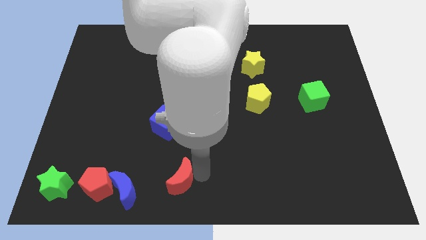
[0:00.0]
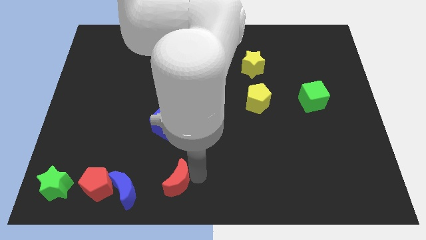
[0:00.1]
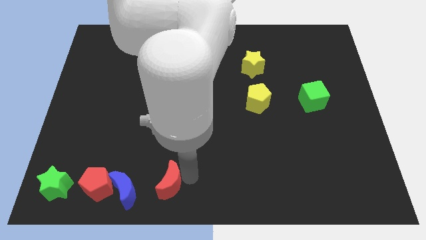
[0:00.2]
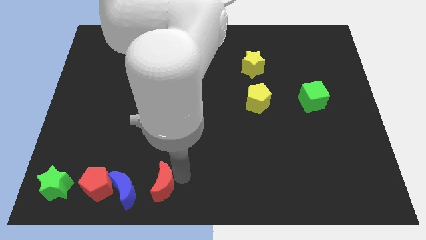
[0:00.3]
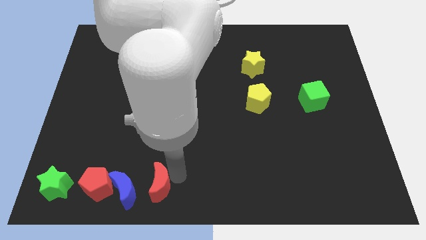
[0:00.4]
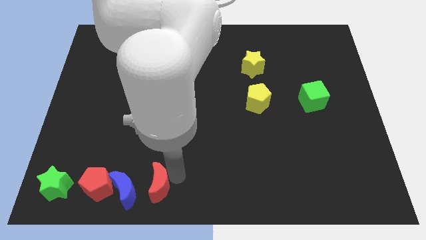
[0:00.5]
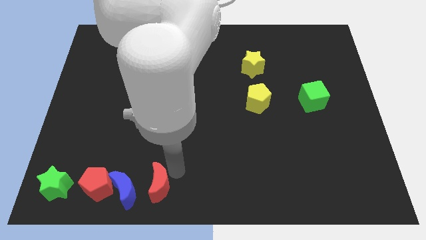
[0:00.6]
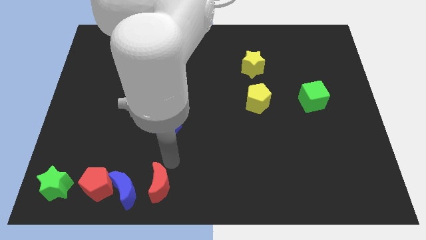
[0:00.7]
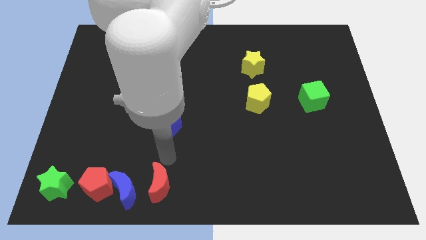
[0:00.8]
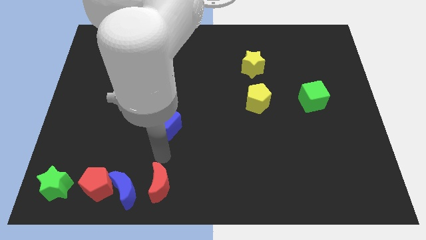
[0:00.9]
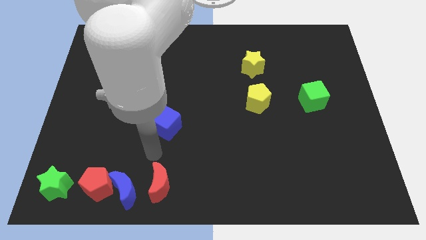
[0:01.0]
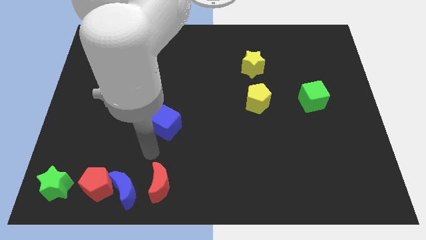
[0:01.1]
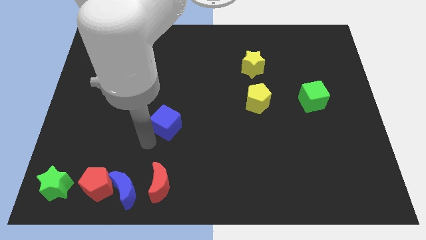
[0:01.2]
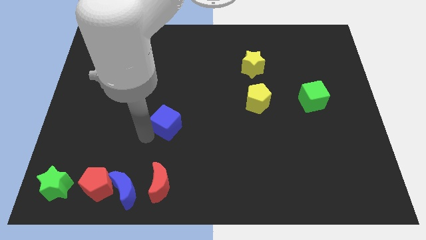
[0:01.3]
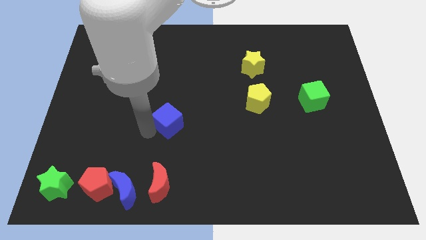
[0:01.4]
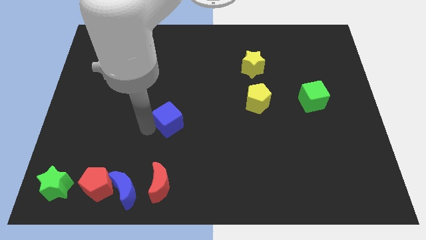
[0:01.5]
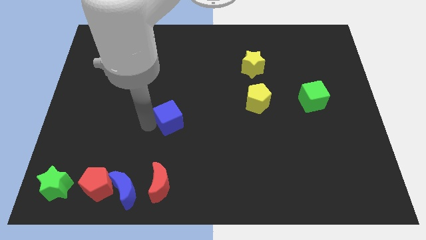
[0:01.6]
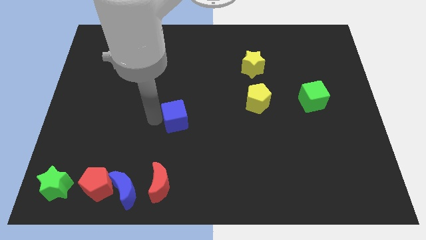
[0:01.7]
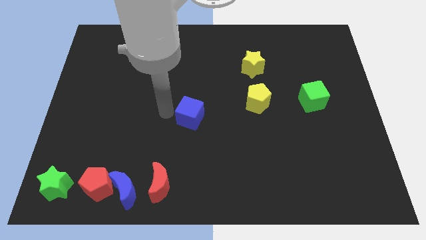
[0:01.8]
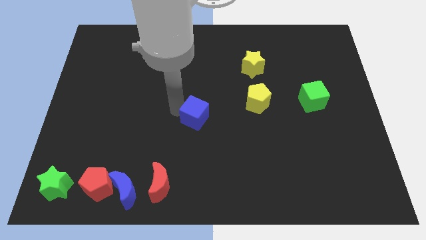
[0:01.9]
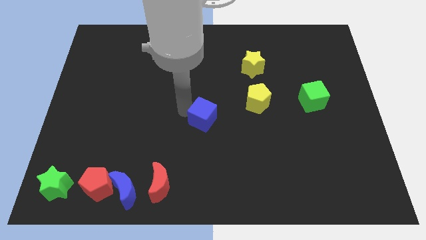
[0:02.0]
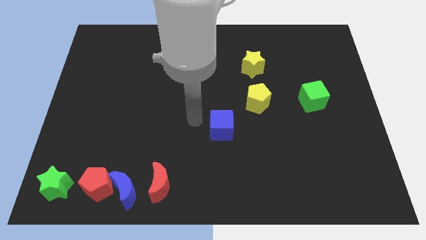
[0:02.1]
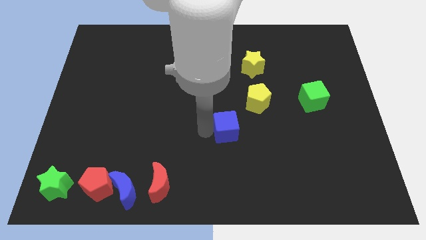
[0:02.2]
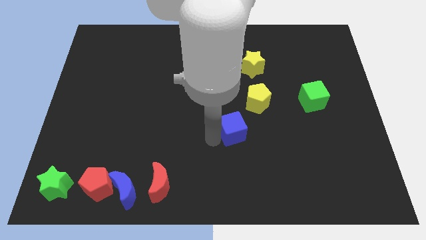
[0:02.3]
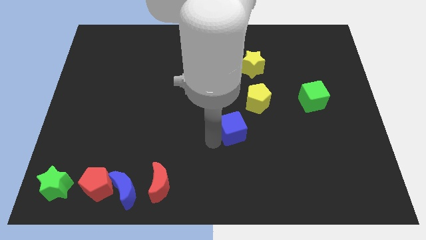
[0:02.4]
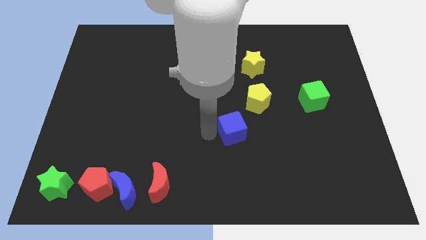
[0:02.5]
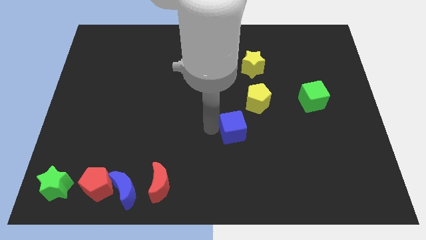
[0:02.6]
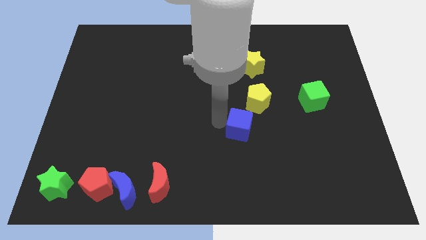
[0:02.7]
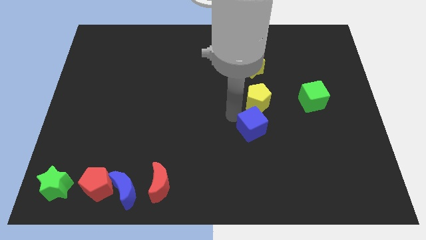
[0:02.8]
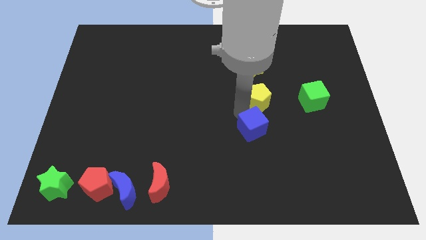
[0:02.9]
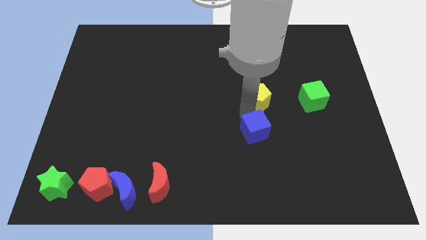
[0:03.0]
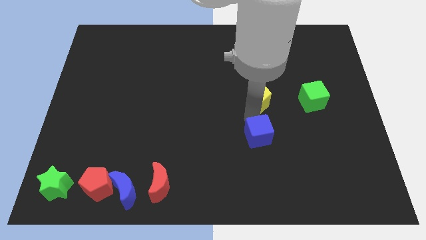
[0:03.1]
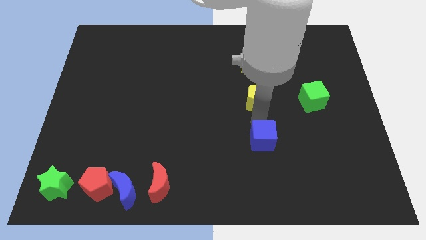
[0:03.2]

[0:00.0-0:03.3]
move the blue cube to the bottom of the yellow pentagon

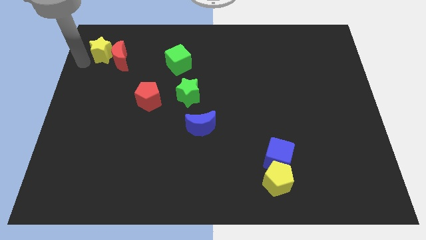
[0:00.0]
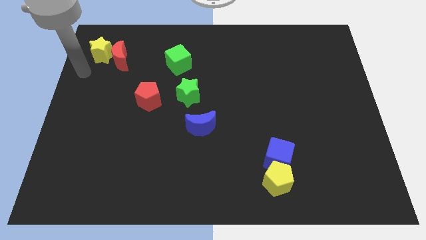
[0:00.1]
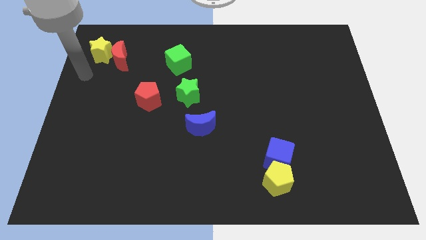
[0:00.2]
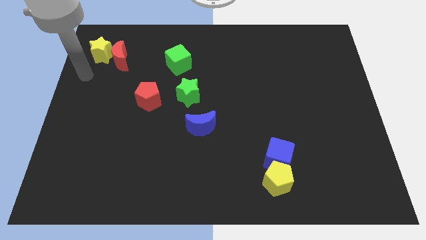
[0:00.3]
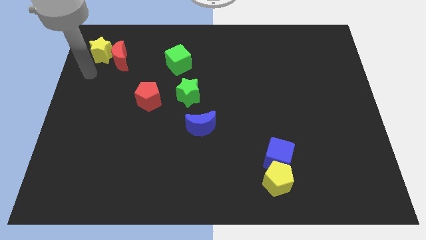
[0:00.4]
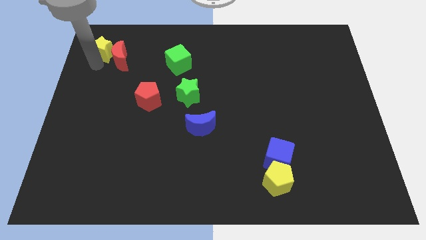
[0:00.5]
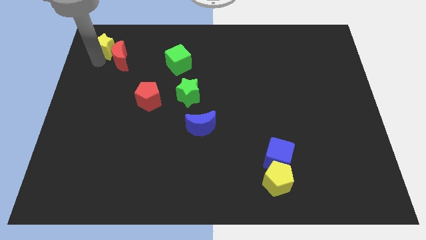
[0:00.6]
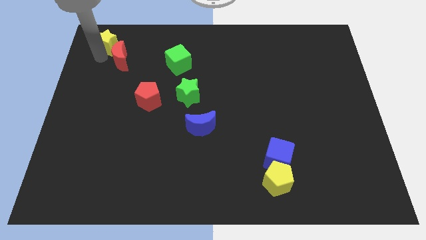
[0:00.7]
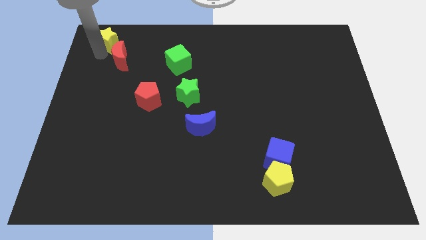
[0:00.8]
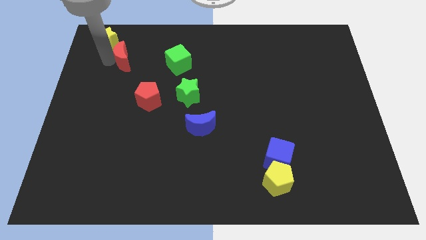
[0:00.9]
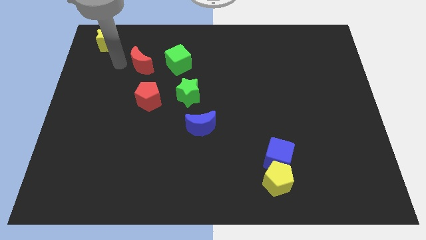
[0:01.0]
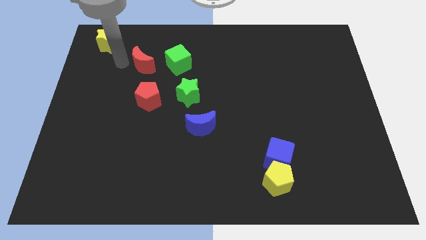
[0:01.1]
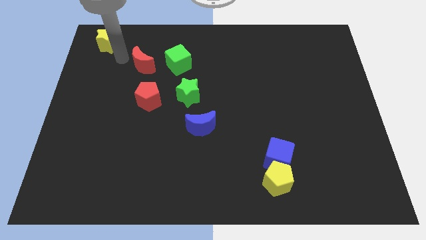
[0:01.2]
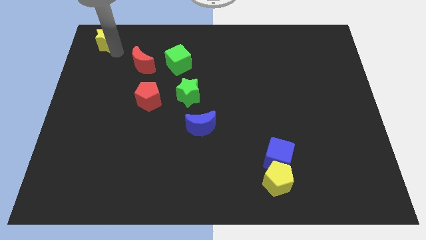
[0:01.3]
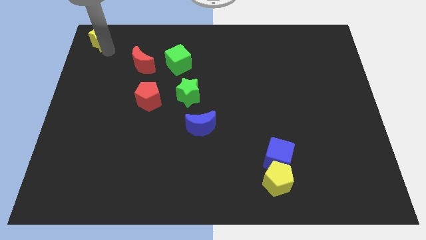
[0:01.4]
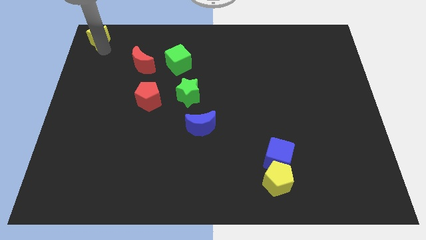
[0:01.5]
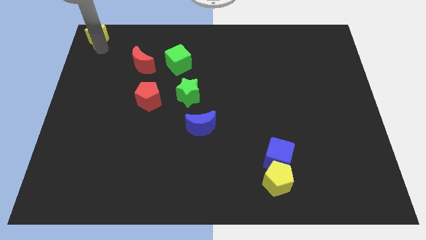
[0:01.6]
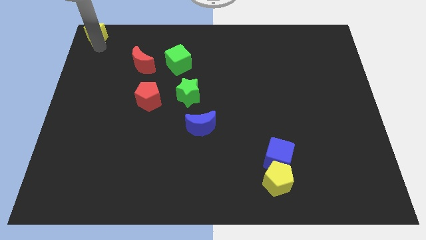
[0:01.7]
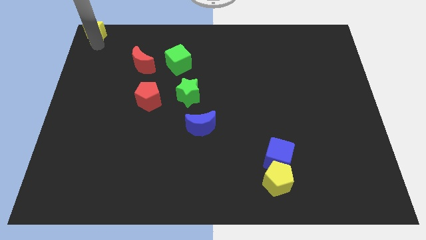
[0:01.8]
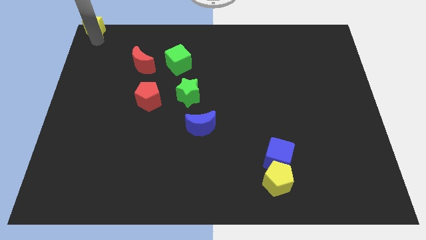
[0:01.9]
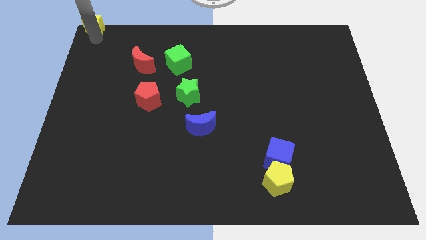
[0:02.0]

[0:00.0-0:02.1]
place yellow star in top left corner

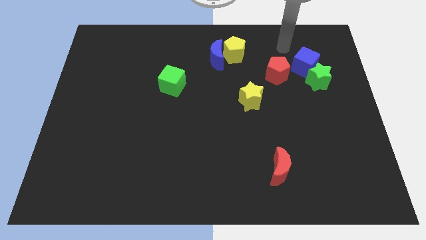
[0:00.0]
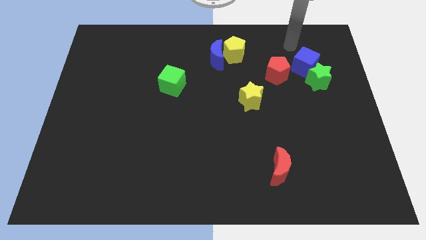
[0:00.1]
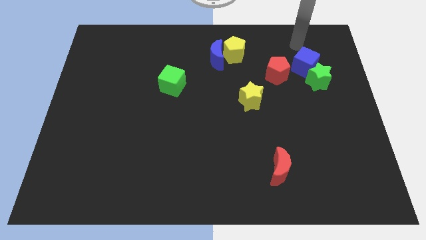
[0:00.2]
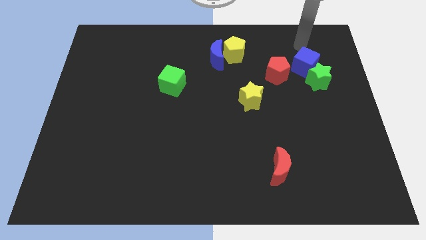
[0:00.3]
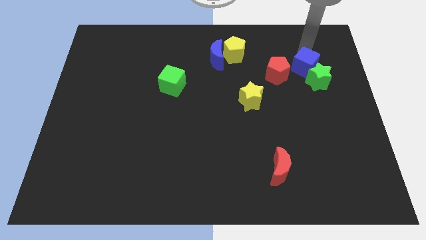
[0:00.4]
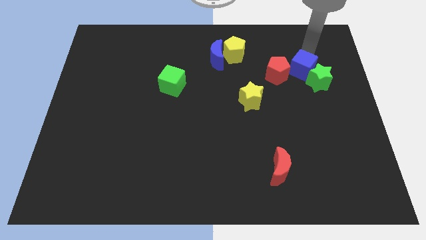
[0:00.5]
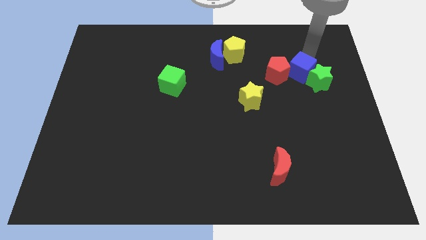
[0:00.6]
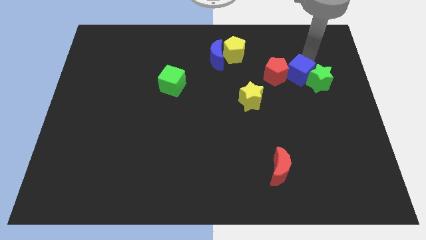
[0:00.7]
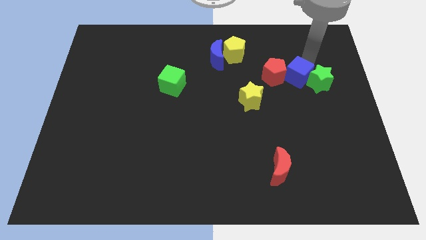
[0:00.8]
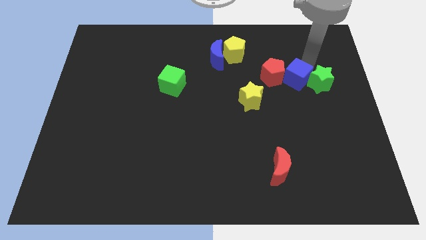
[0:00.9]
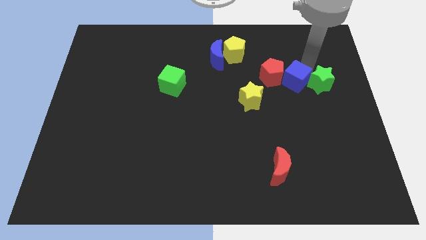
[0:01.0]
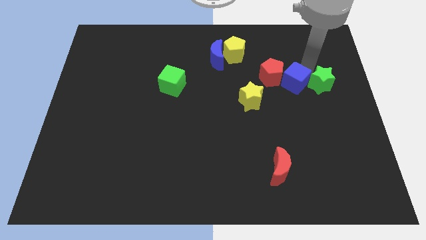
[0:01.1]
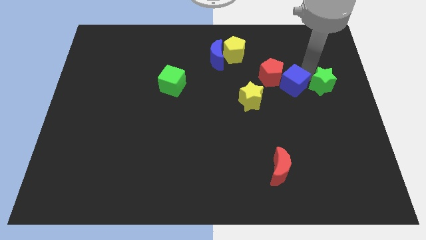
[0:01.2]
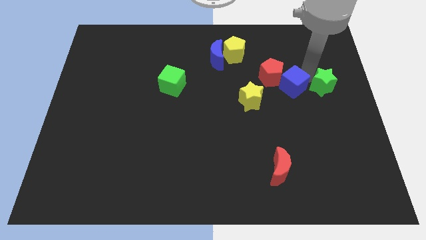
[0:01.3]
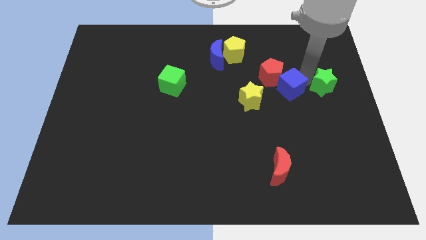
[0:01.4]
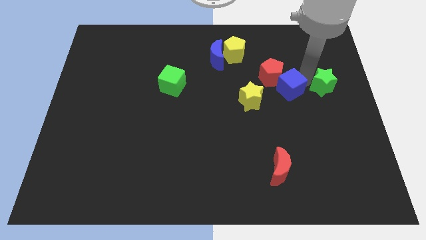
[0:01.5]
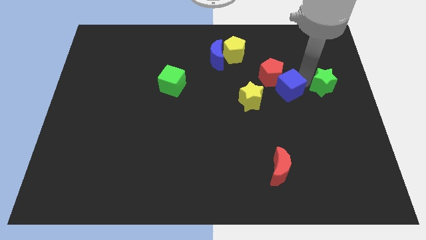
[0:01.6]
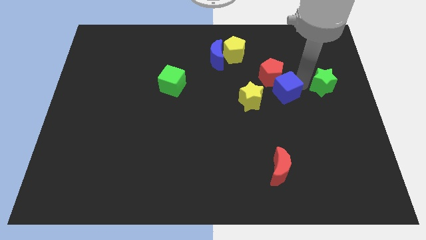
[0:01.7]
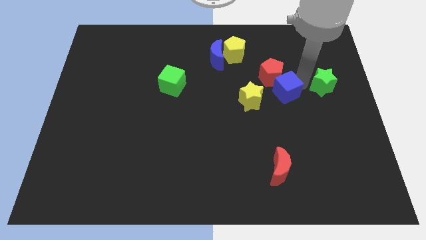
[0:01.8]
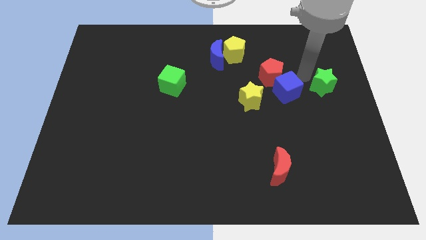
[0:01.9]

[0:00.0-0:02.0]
push the blue cube towards the yellow star to form a triangle

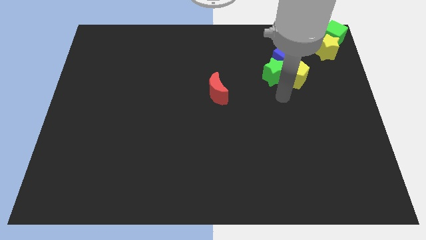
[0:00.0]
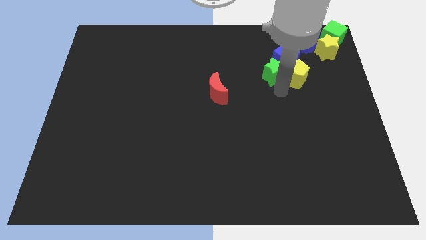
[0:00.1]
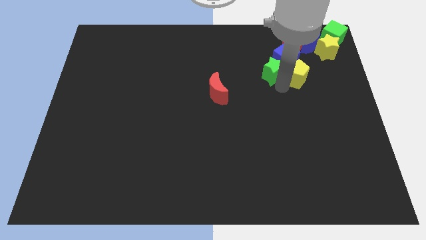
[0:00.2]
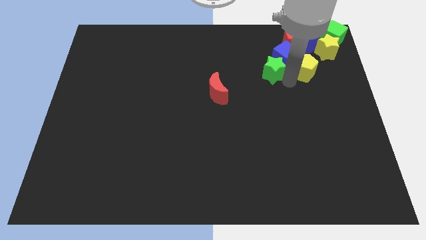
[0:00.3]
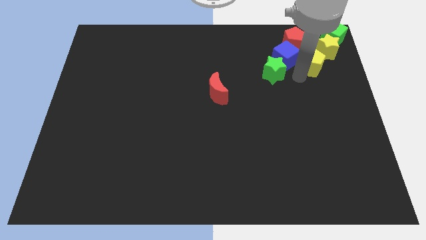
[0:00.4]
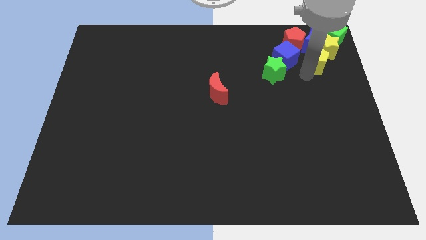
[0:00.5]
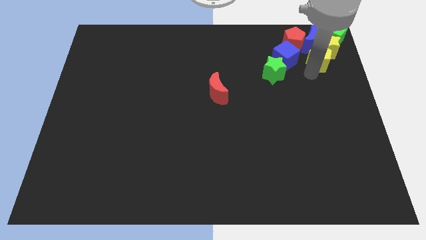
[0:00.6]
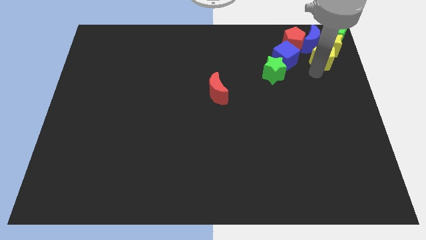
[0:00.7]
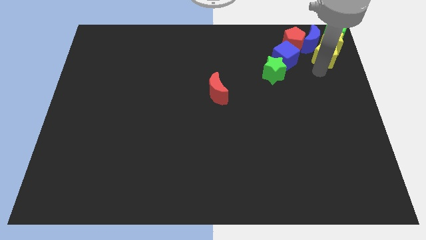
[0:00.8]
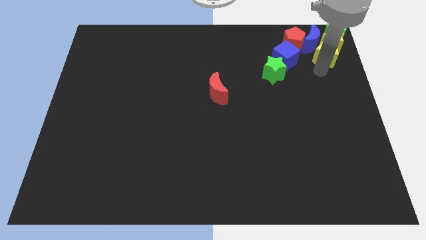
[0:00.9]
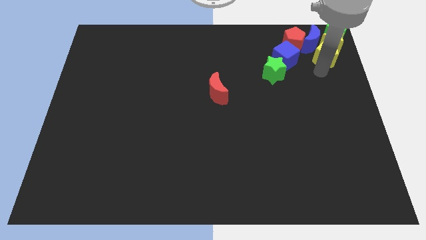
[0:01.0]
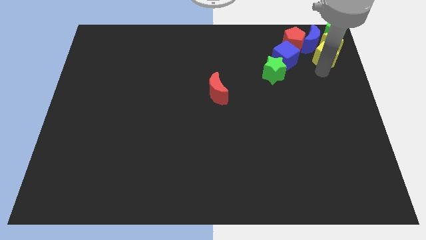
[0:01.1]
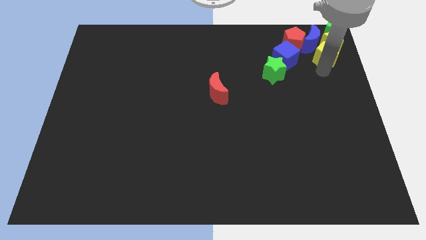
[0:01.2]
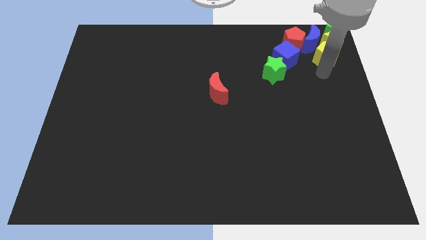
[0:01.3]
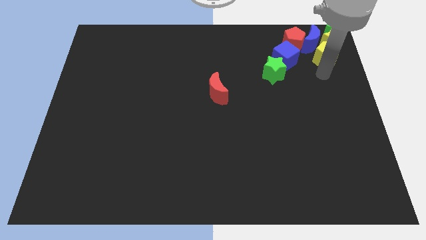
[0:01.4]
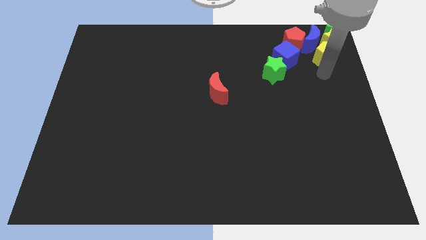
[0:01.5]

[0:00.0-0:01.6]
push the yellow pentagon into the yellow star

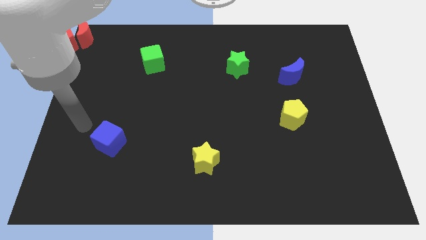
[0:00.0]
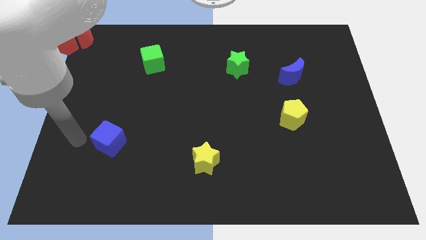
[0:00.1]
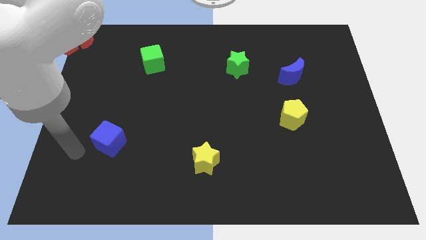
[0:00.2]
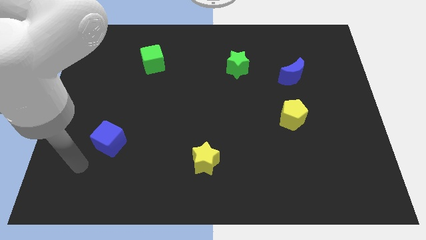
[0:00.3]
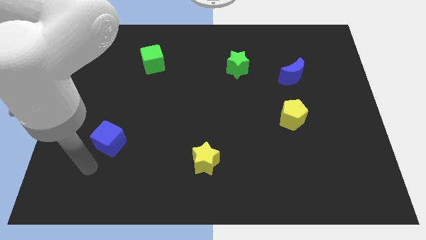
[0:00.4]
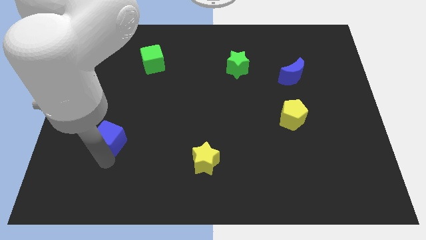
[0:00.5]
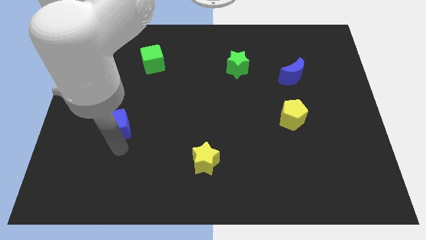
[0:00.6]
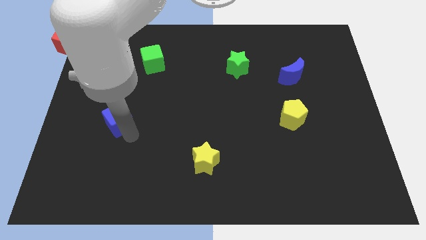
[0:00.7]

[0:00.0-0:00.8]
touch the bottom of blue cube
